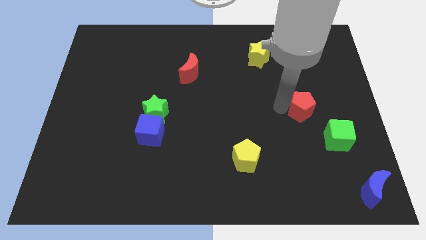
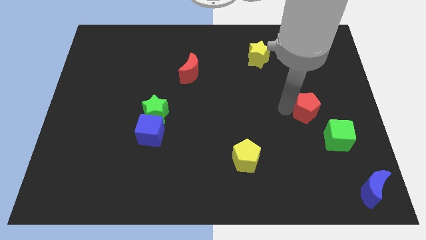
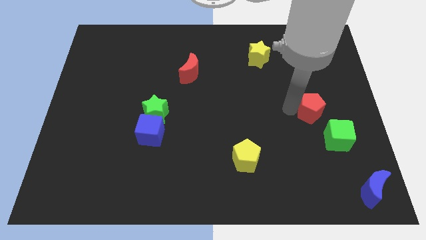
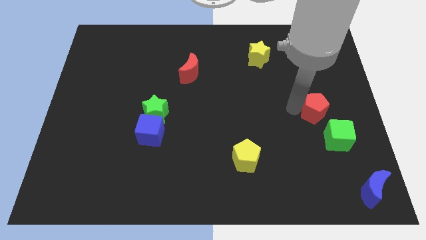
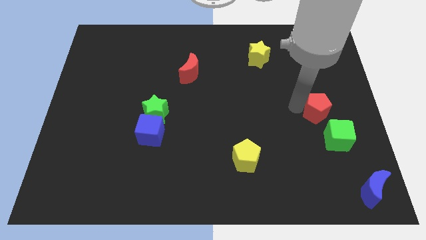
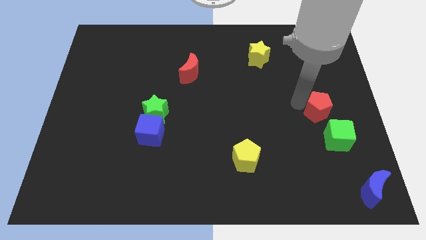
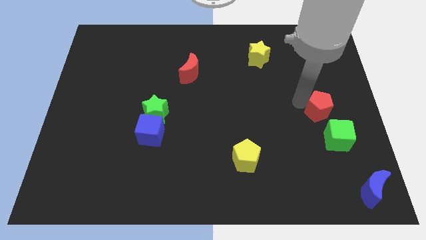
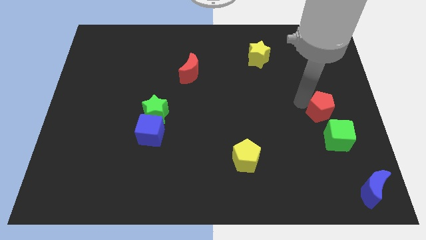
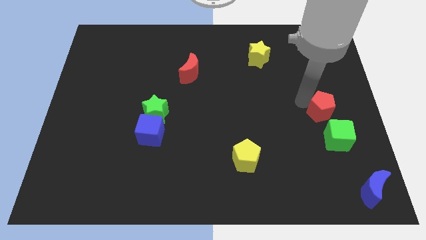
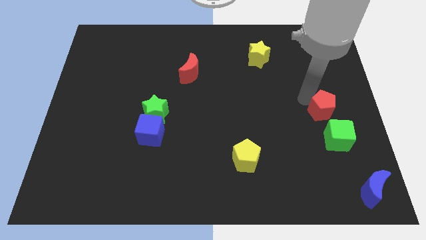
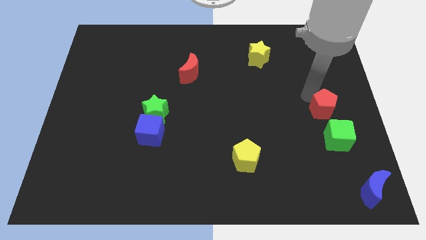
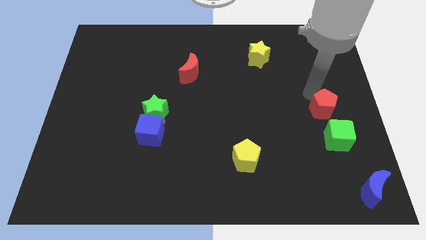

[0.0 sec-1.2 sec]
move red pentagon left above the green cube

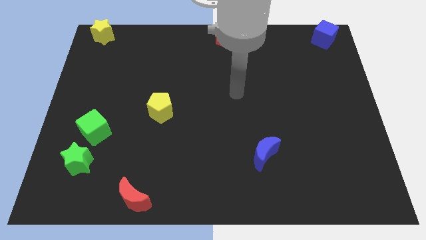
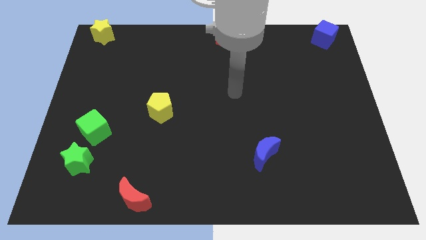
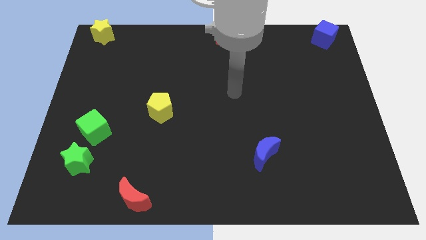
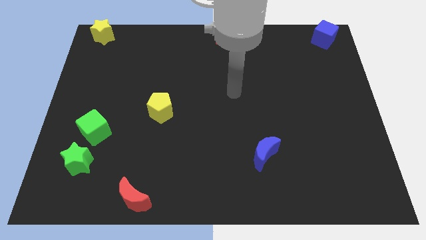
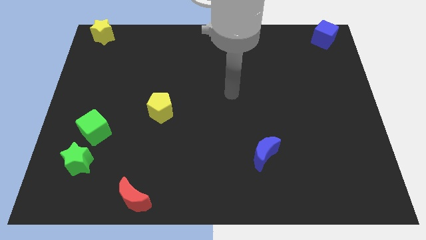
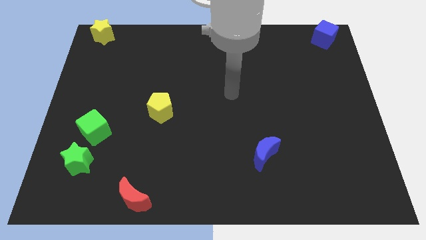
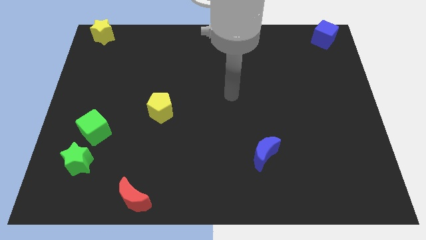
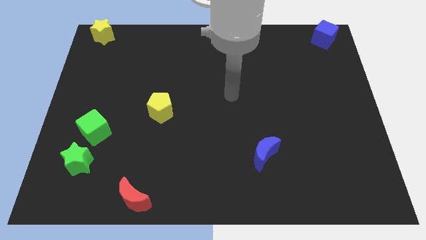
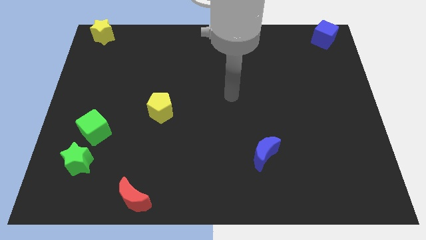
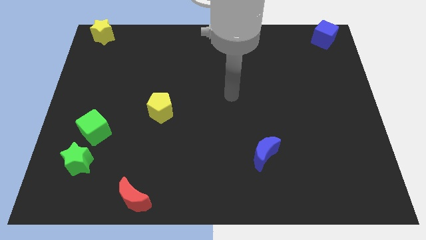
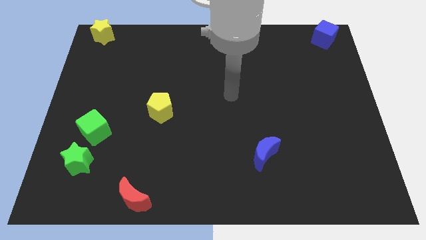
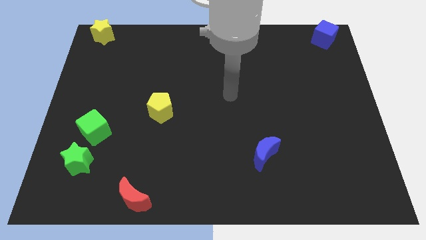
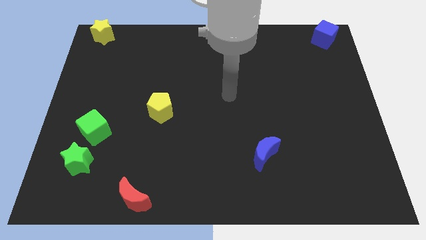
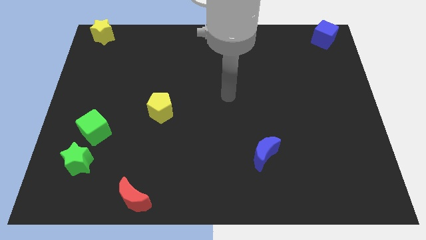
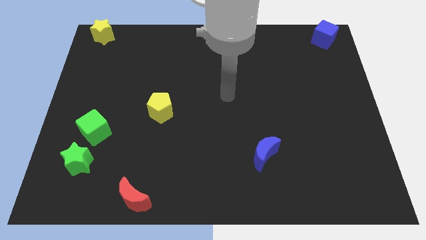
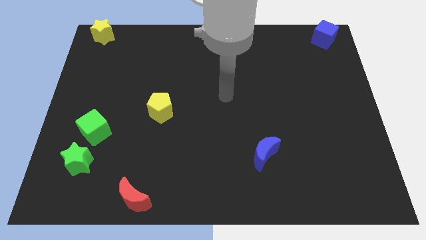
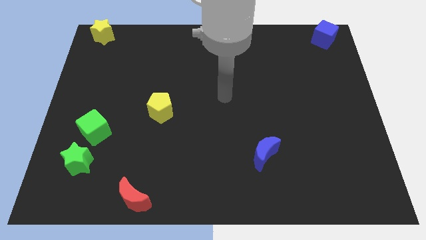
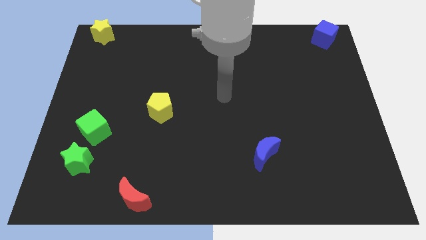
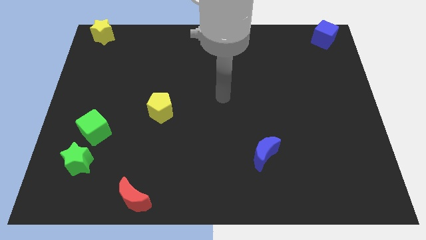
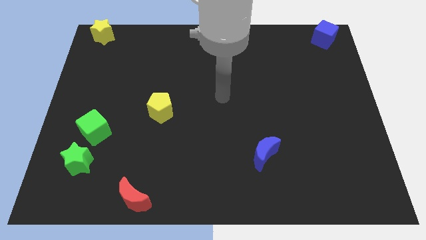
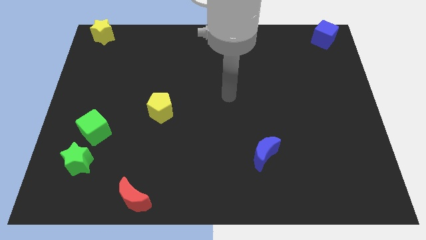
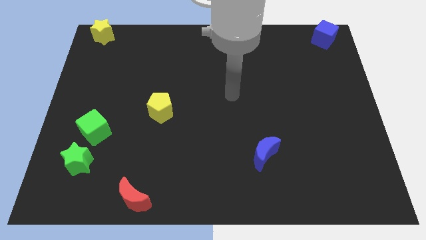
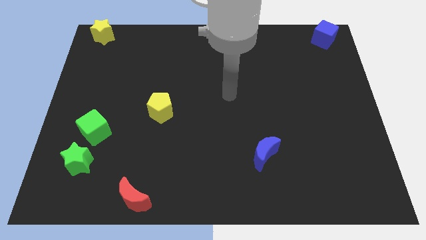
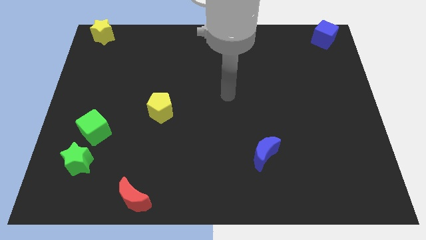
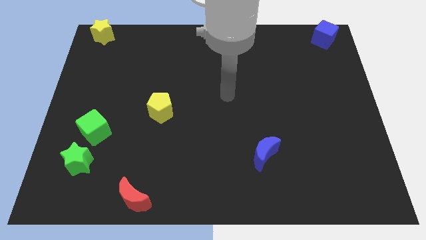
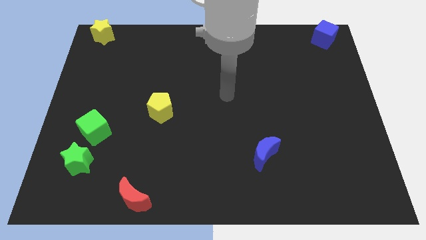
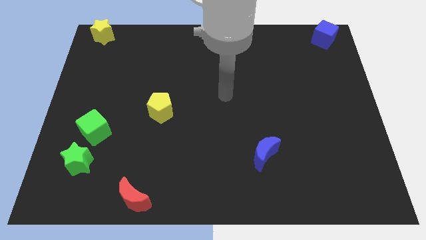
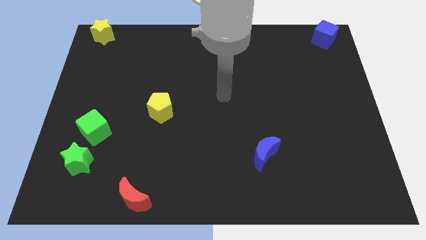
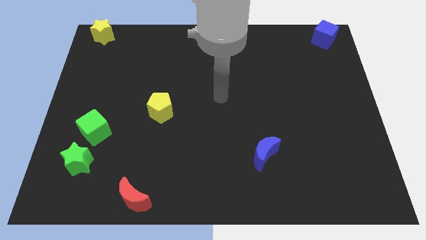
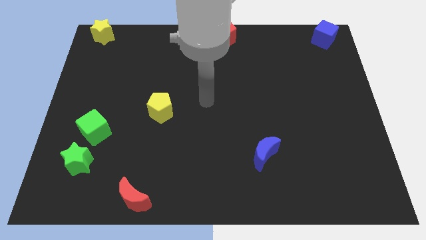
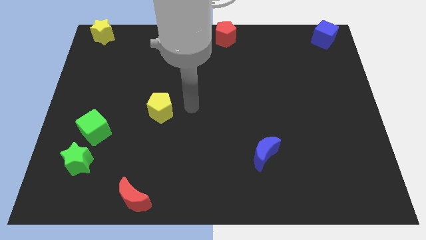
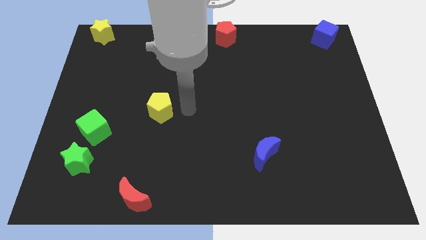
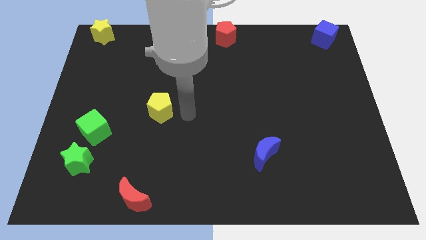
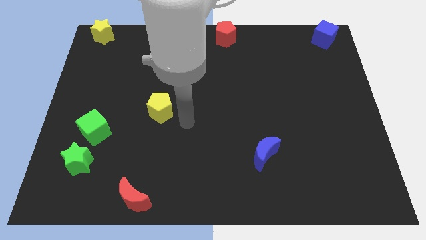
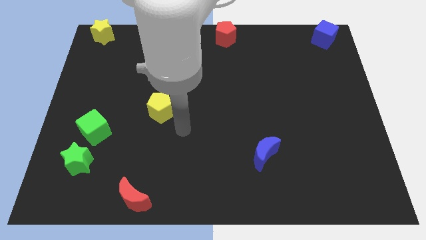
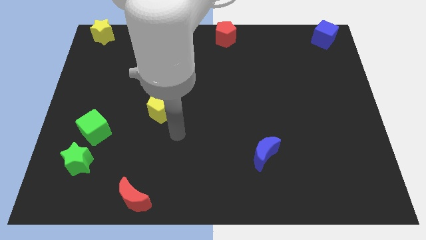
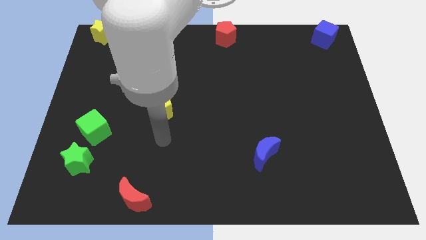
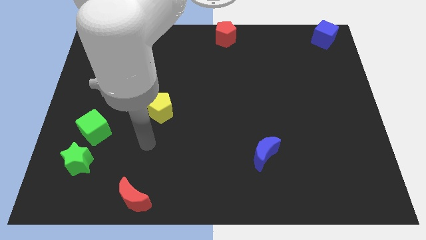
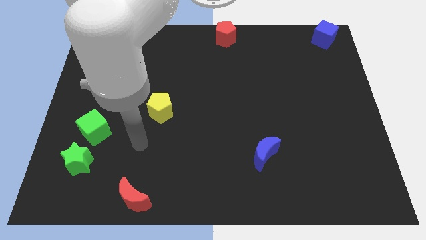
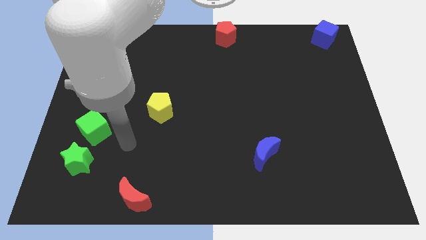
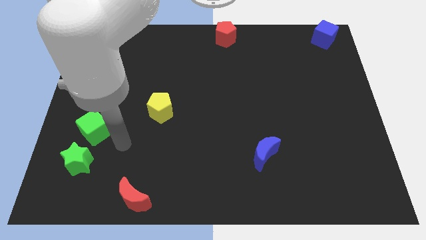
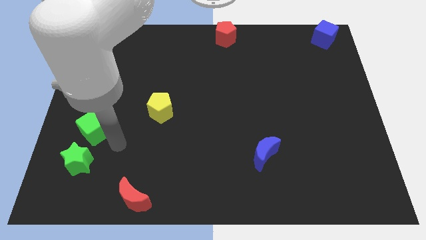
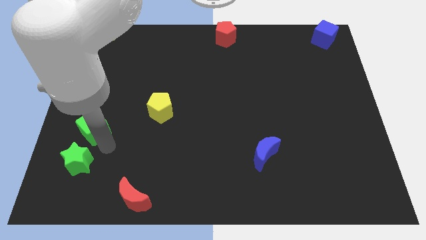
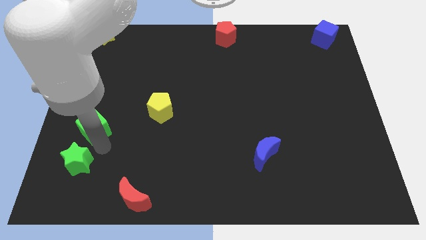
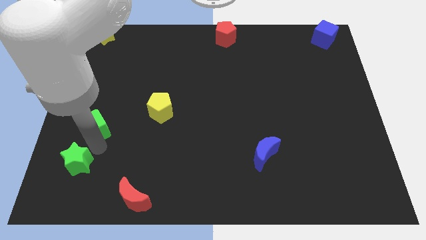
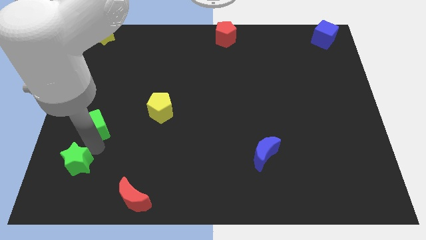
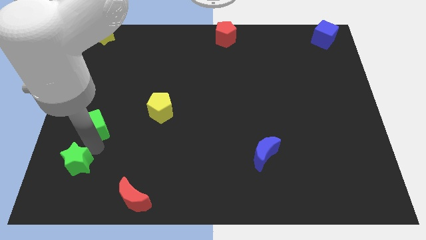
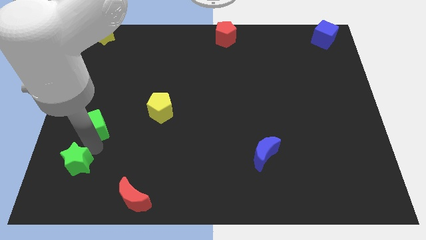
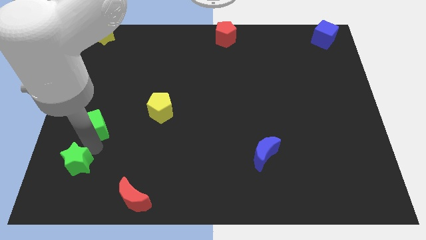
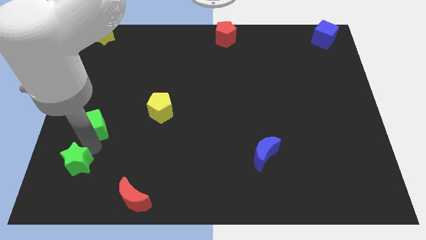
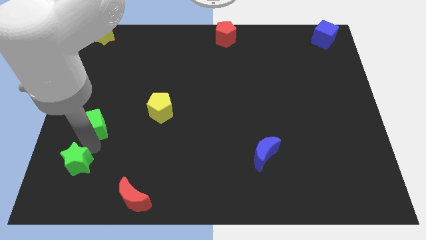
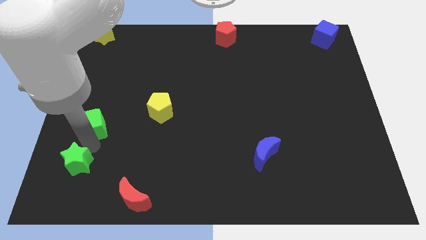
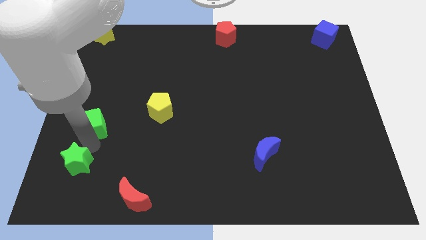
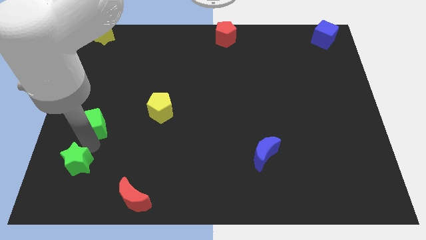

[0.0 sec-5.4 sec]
place your arm below the green cube

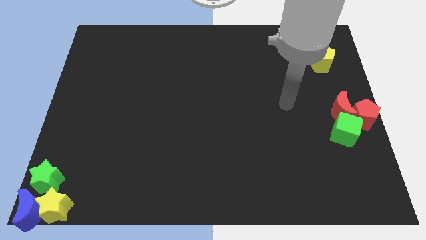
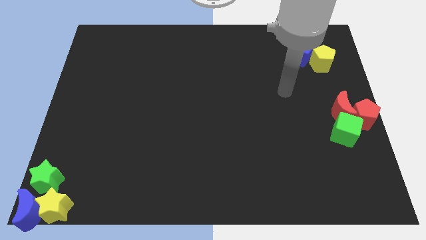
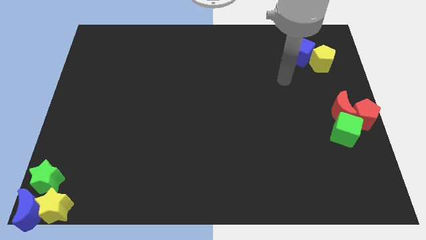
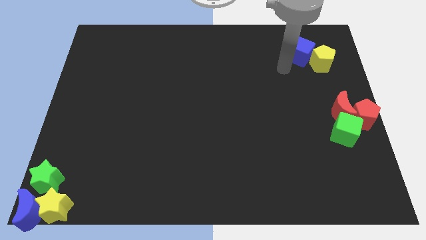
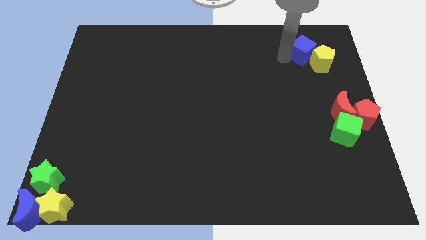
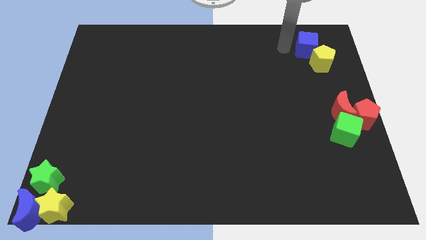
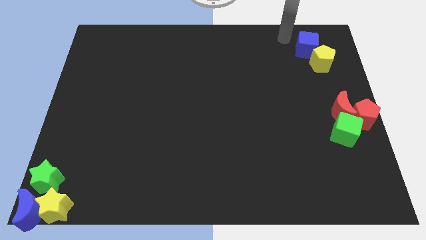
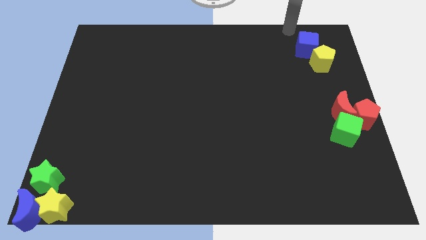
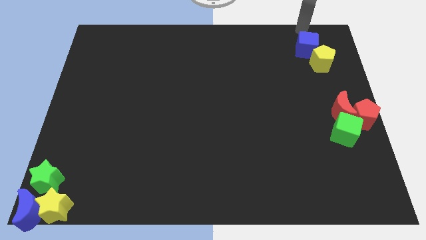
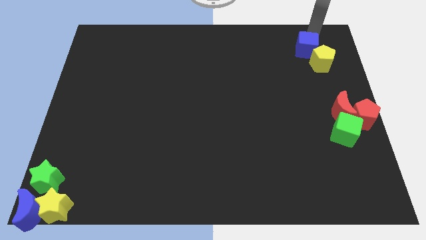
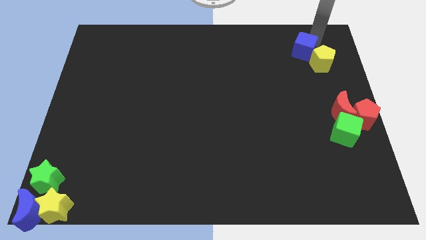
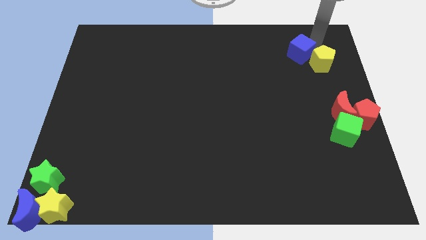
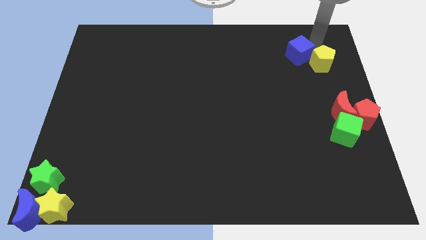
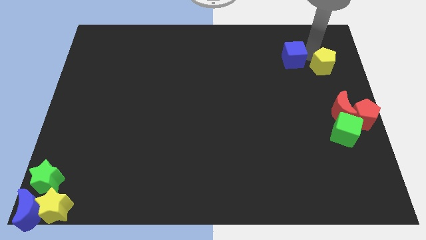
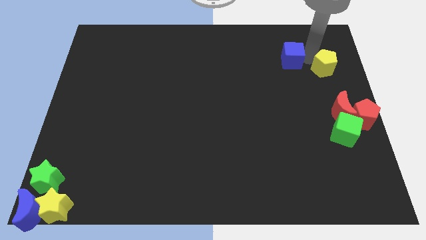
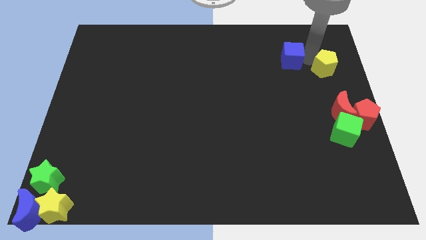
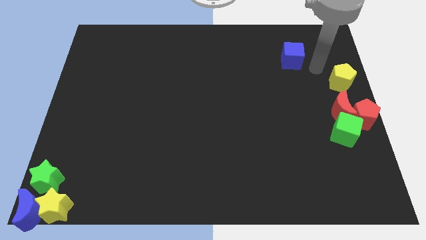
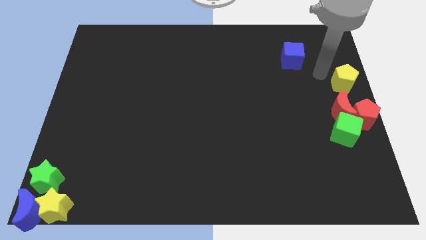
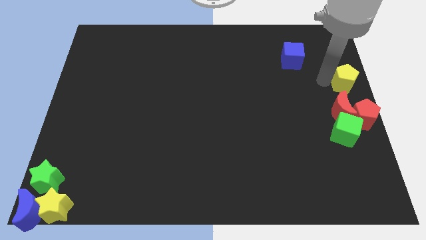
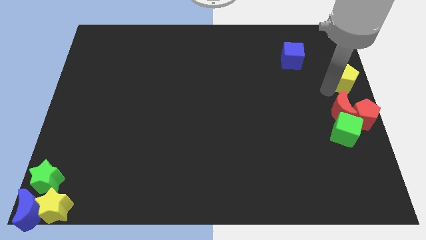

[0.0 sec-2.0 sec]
separate yellow pentagon from blue cube

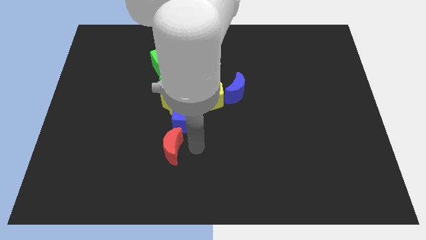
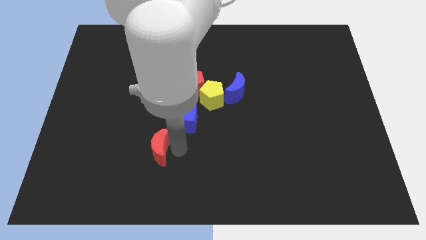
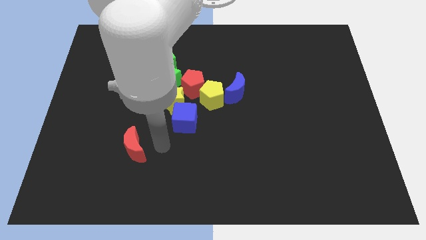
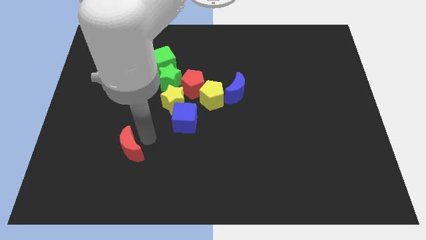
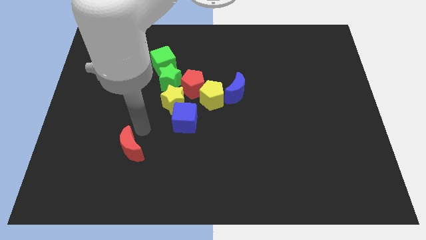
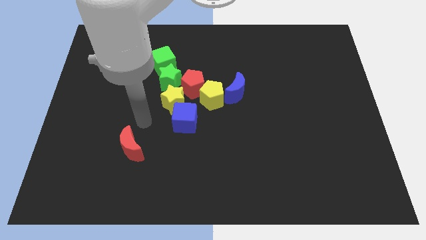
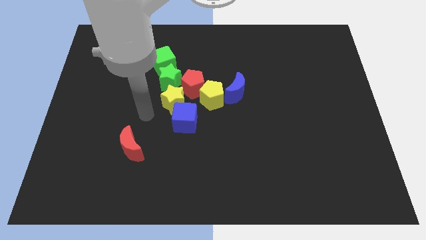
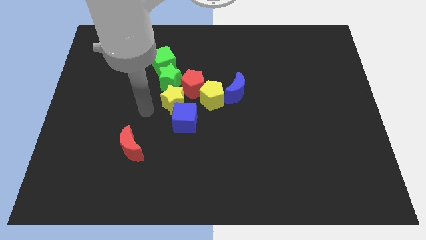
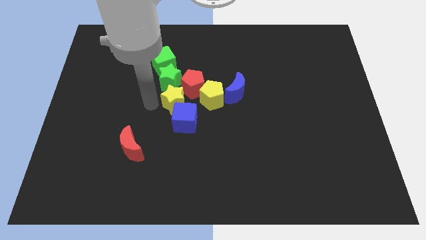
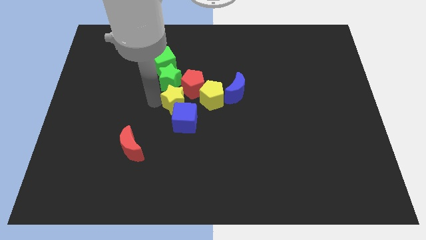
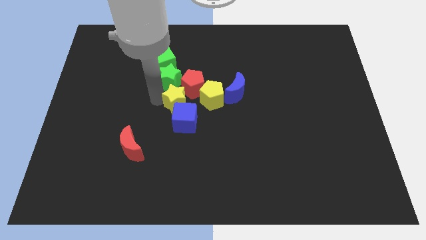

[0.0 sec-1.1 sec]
push the red crescent to the left
